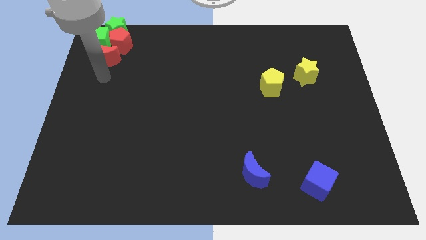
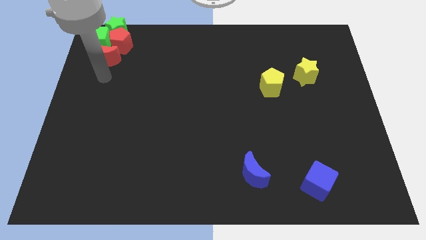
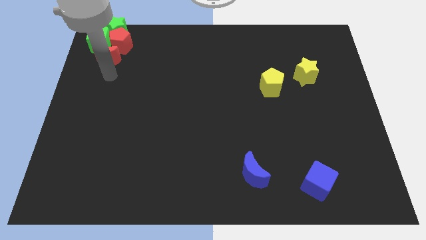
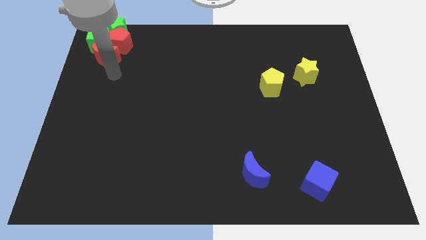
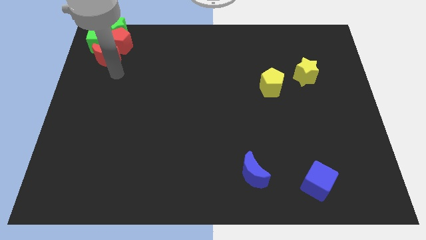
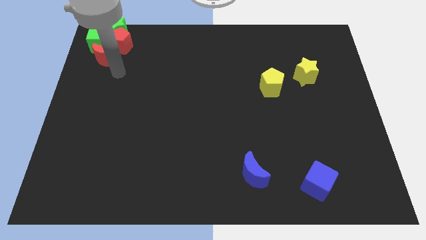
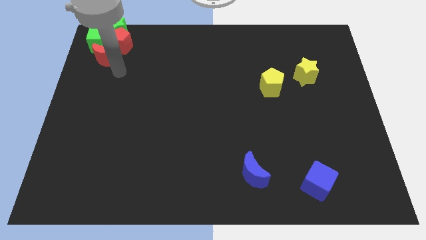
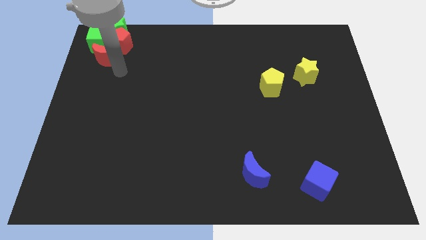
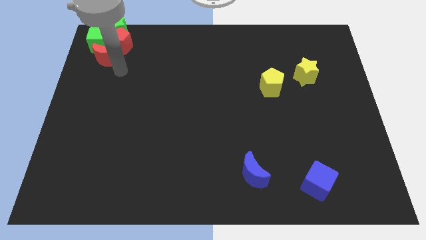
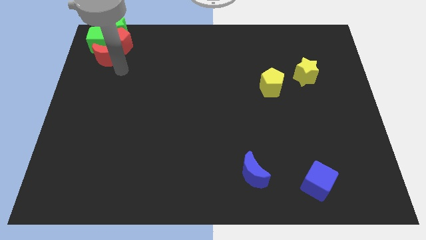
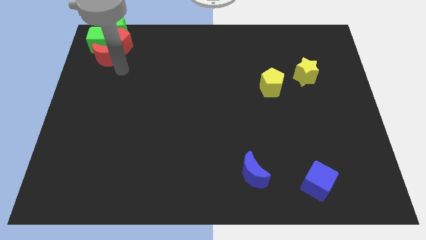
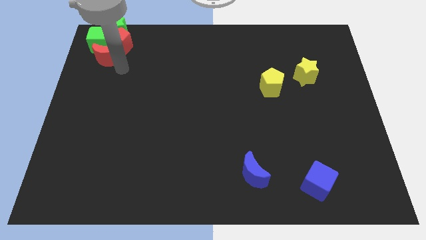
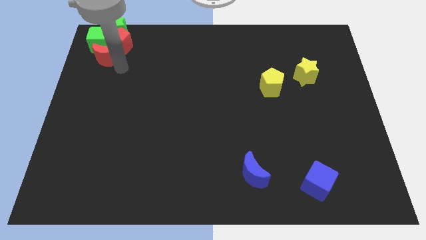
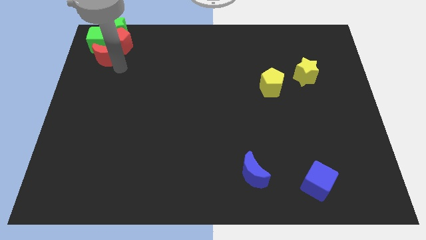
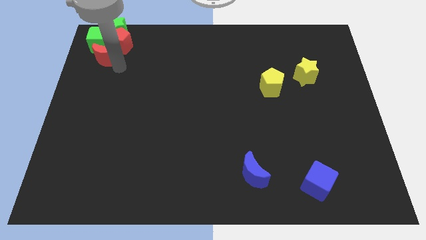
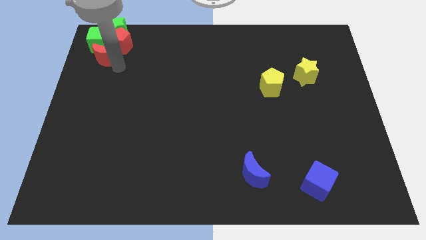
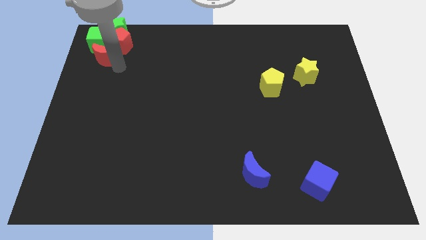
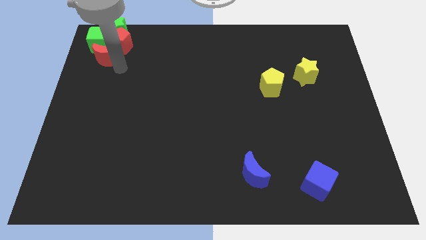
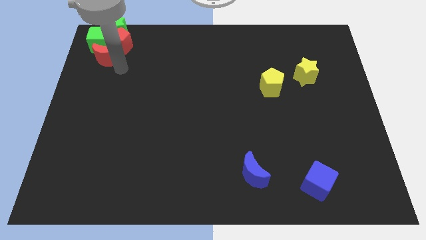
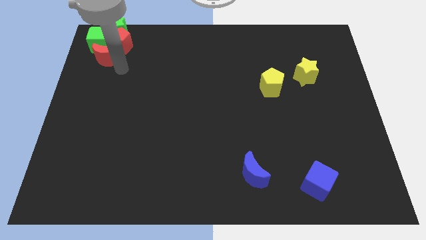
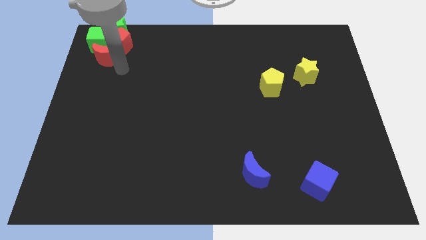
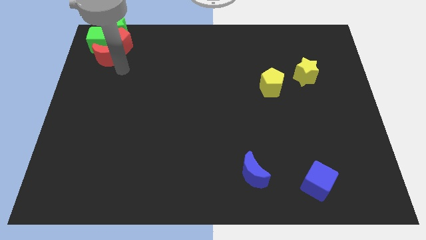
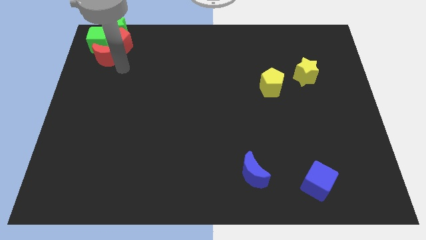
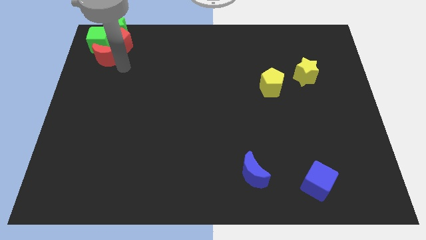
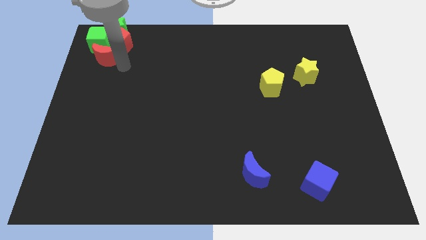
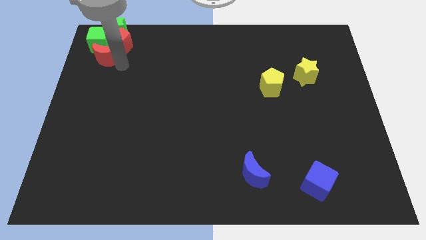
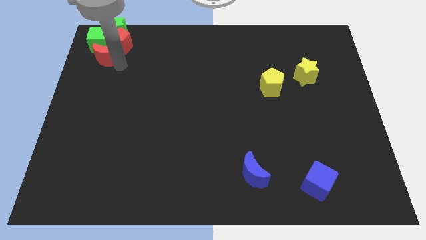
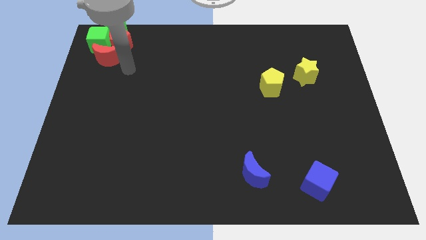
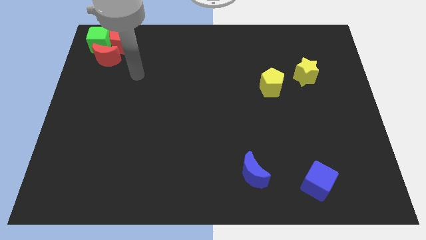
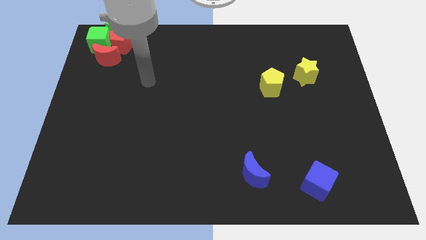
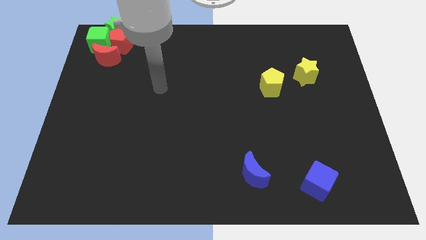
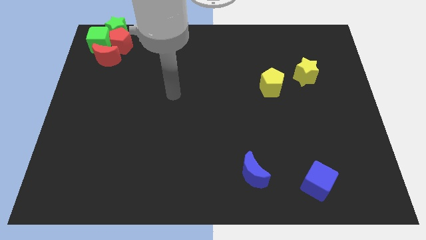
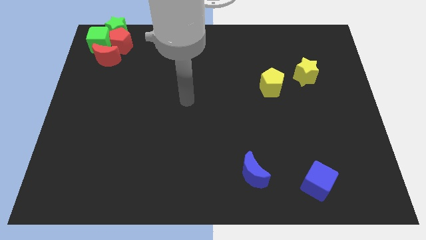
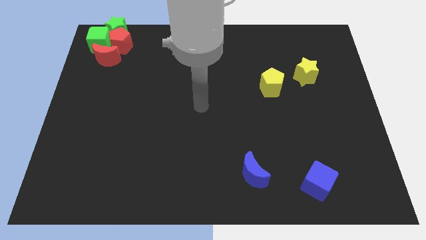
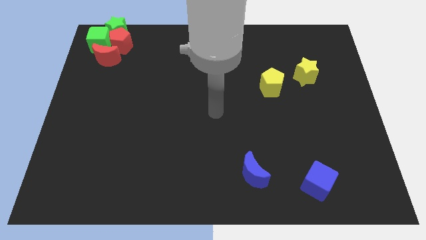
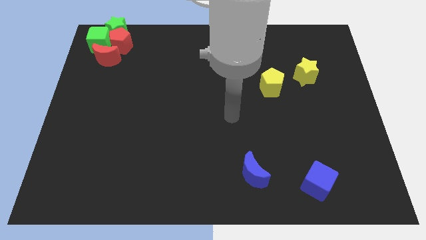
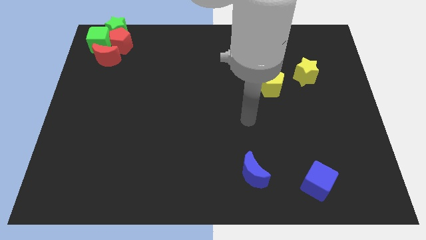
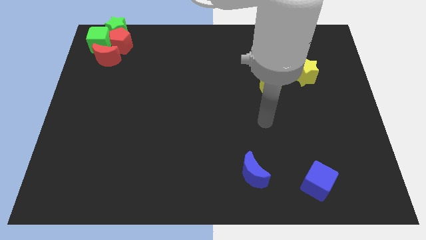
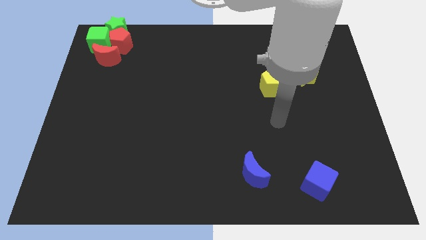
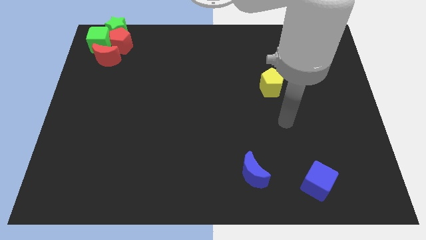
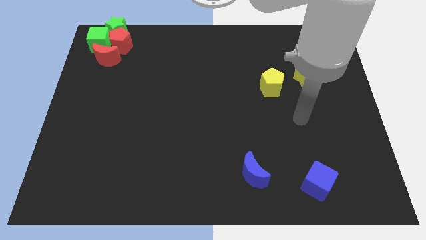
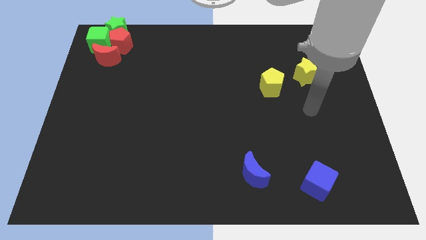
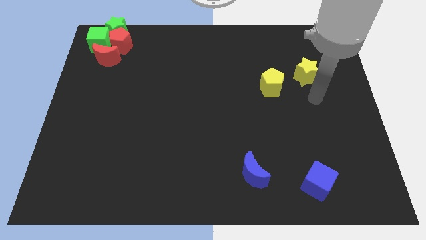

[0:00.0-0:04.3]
move your arm towards the yellow star

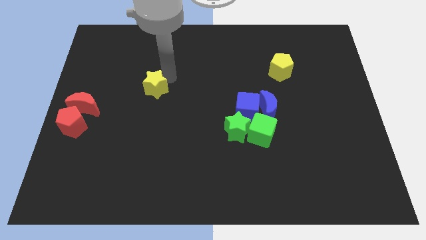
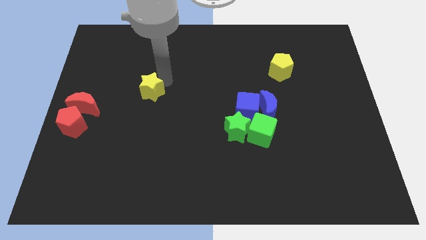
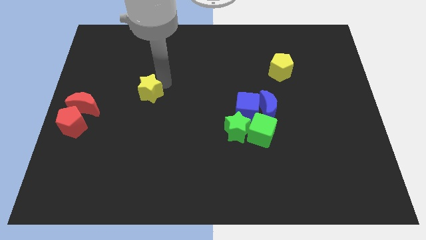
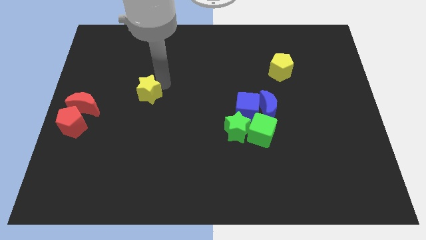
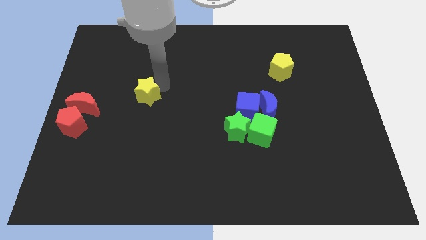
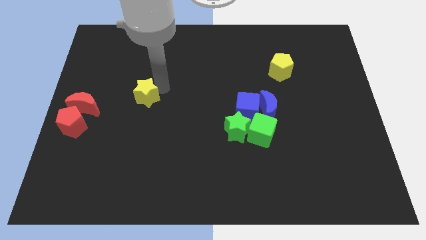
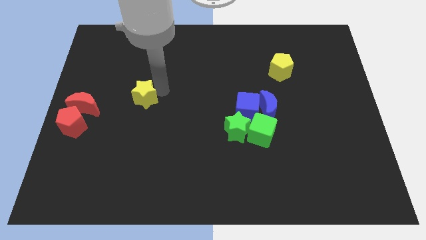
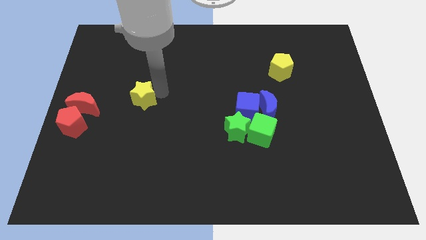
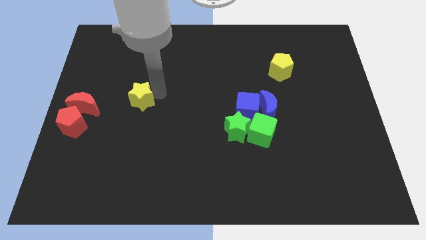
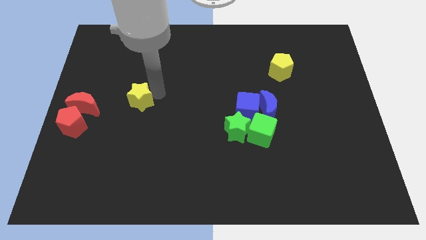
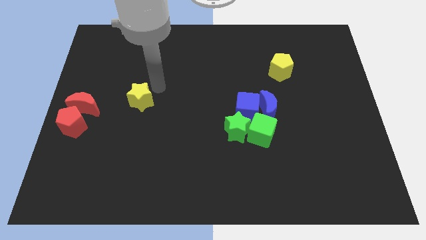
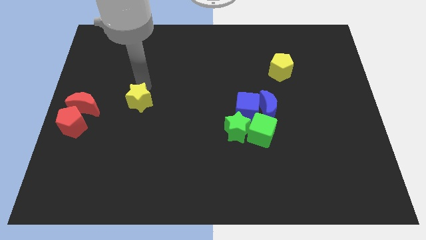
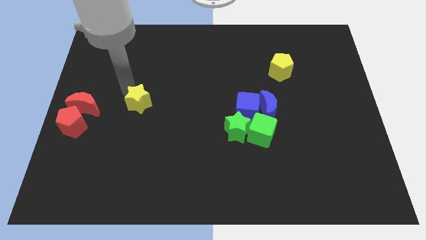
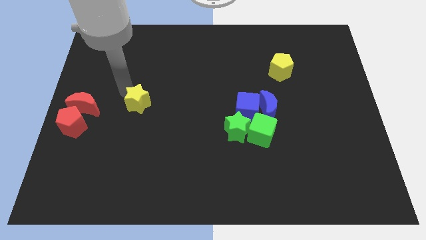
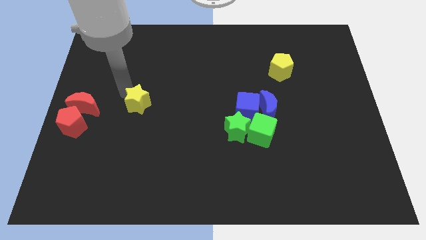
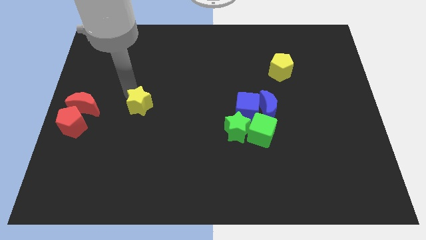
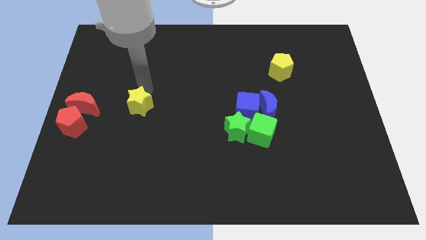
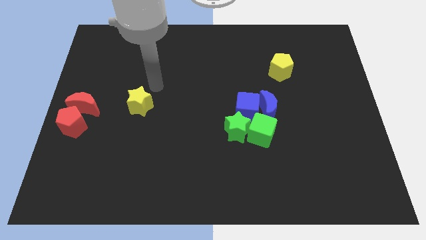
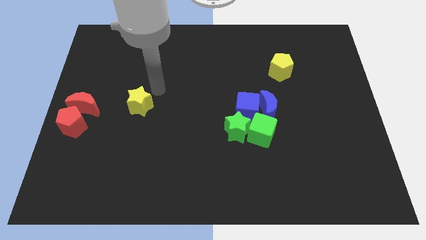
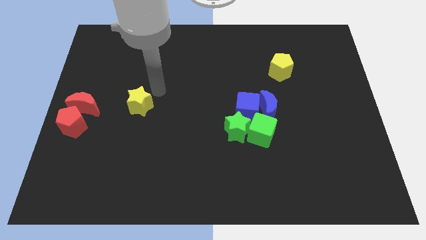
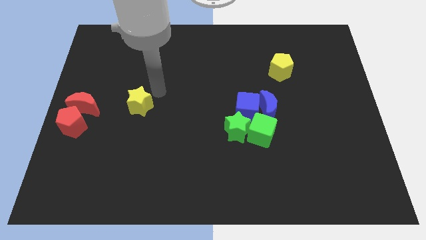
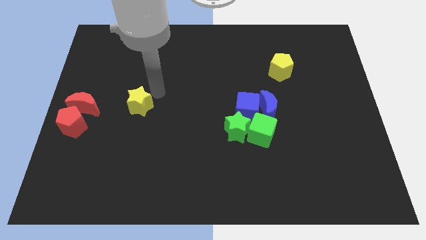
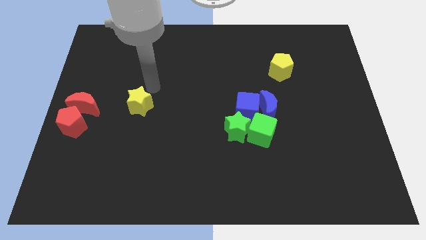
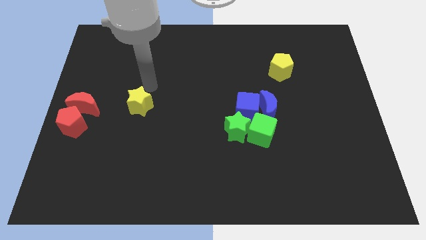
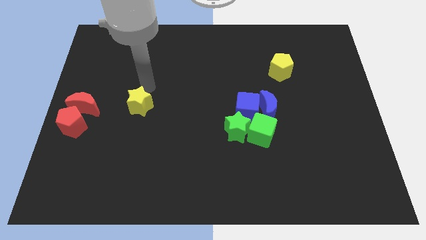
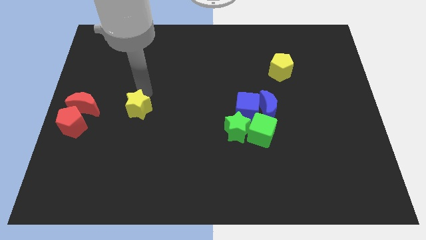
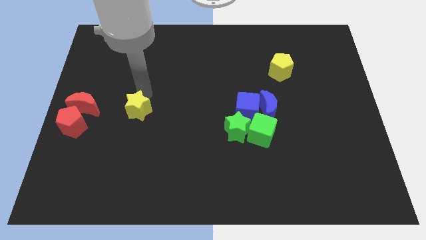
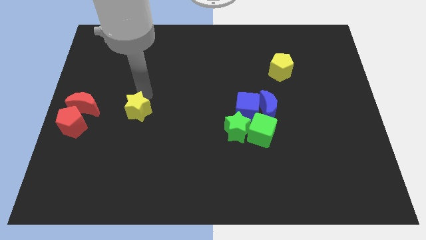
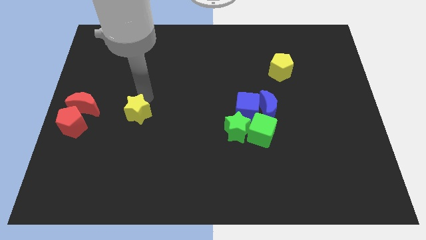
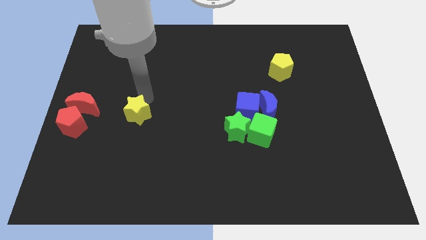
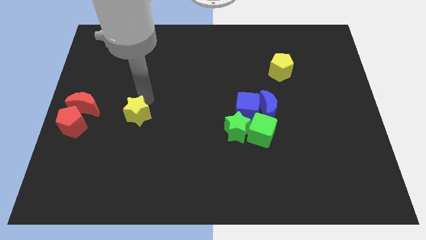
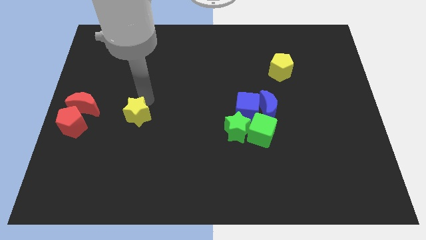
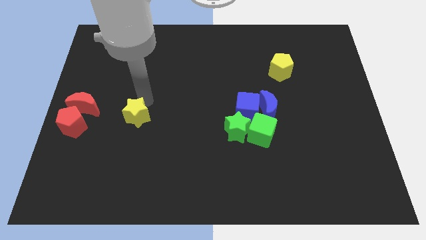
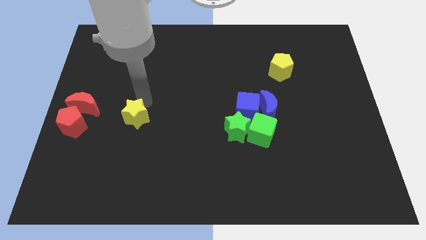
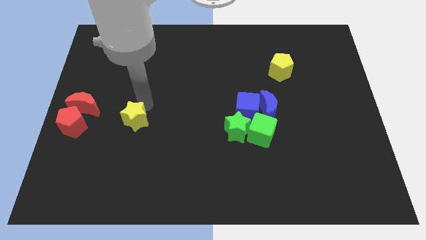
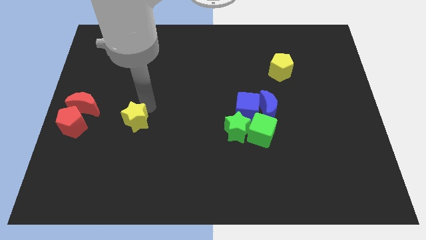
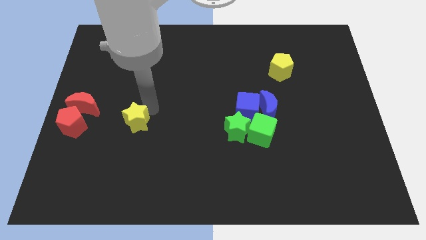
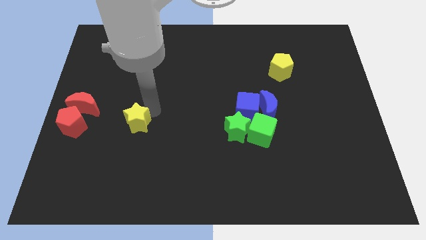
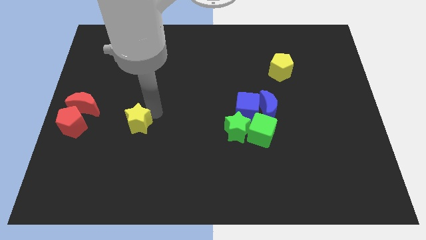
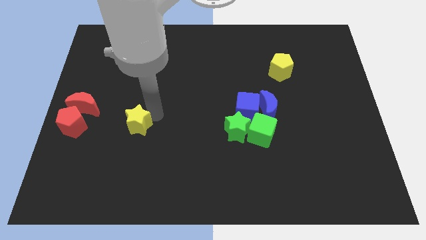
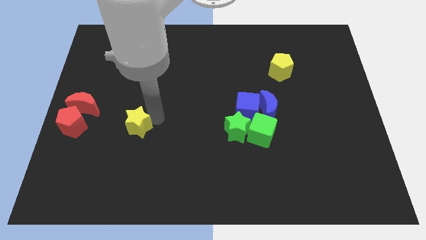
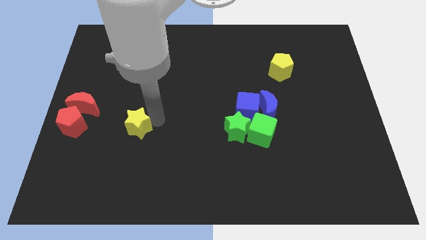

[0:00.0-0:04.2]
drag the yellow star slightly downwards

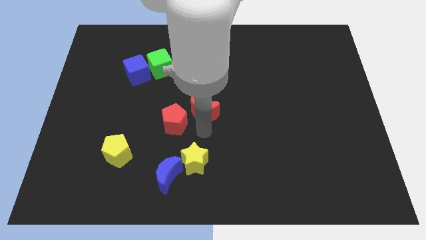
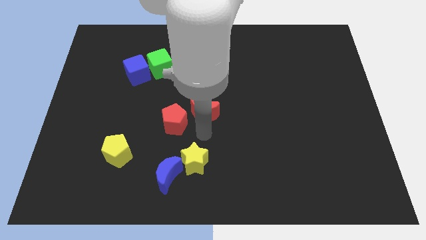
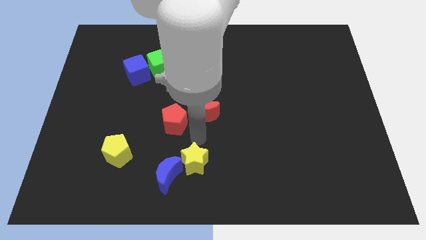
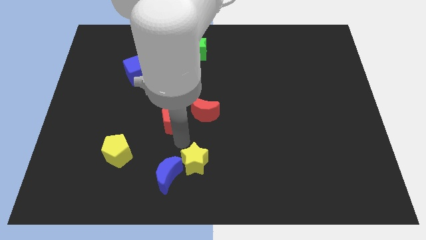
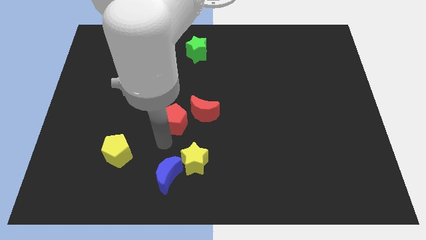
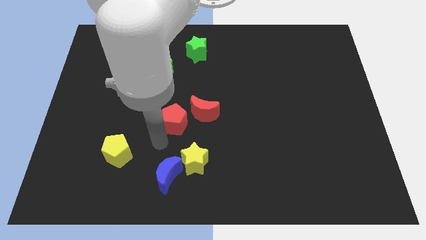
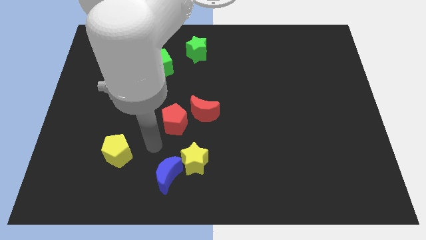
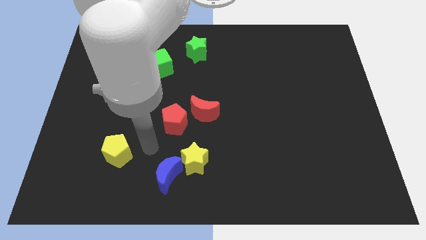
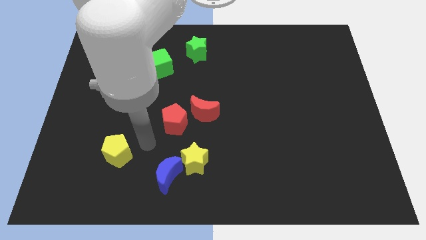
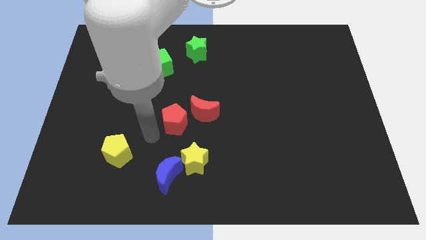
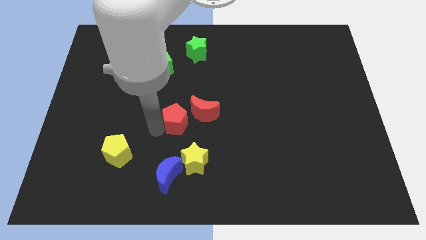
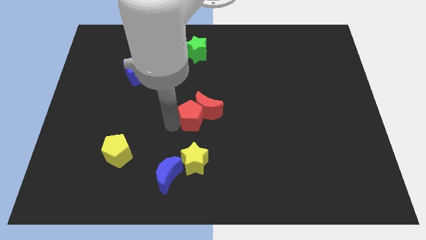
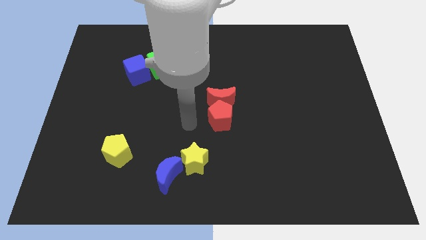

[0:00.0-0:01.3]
push the red pentagon into the red moon
